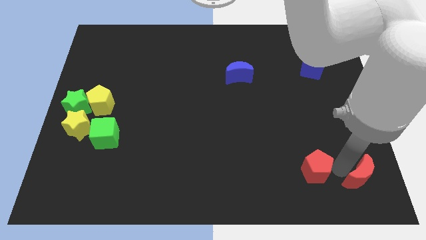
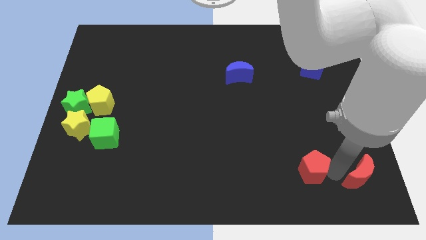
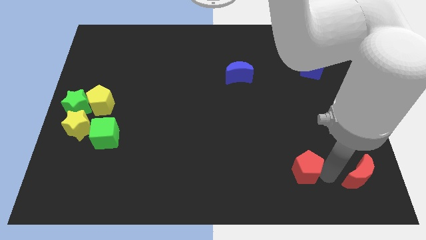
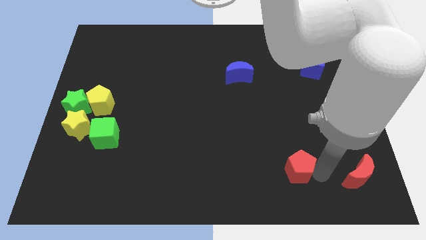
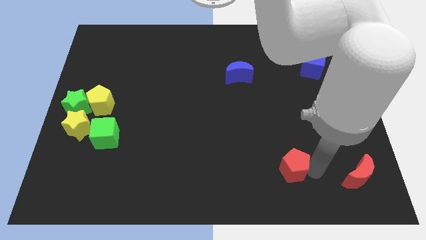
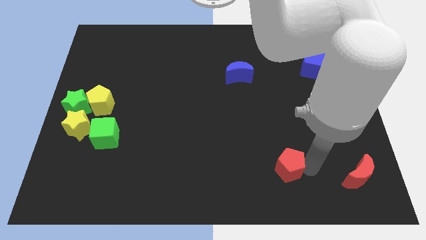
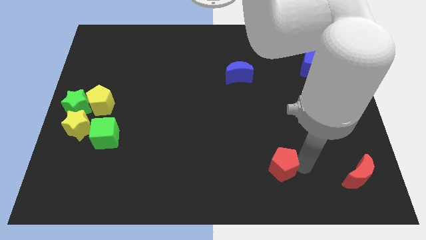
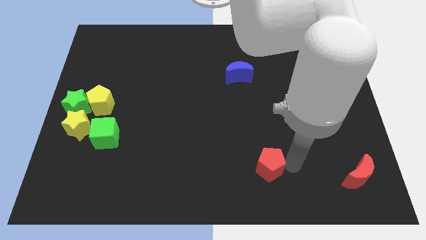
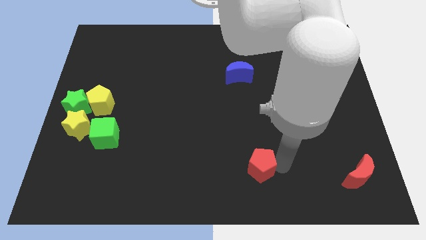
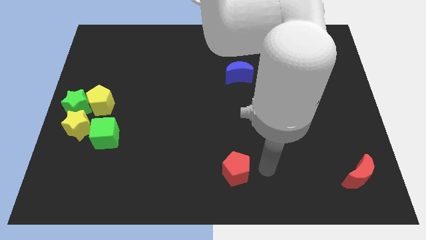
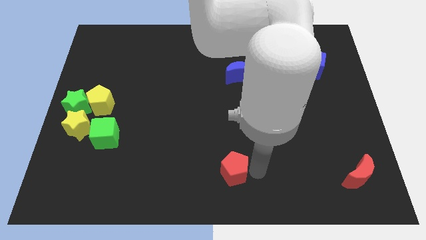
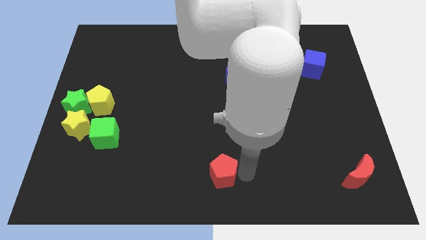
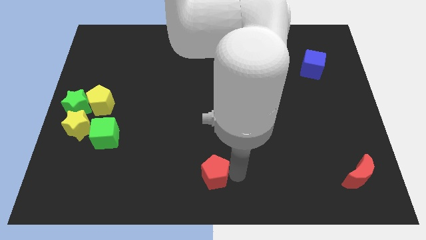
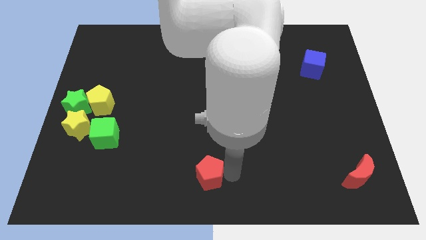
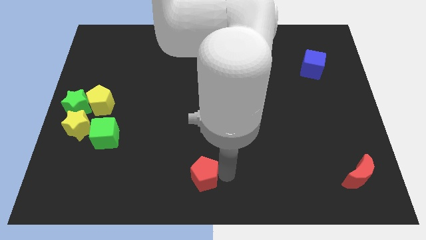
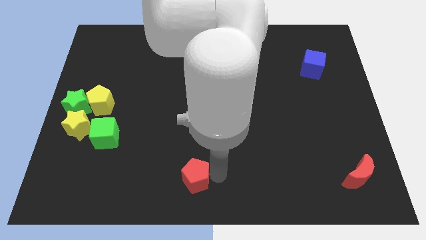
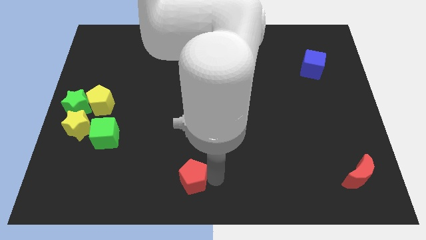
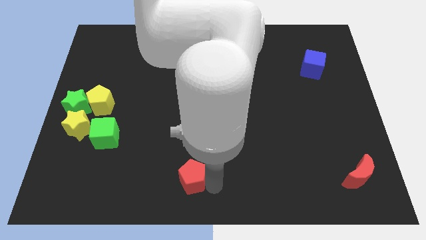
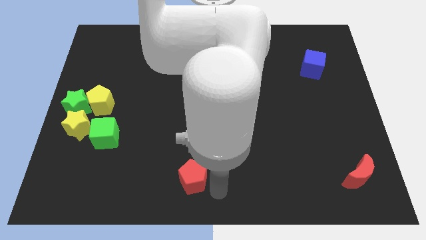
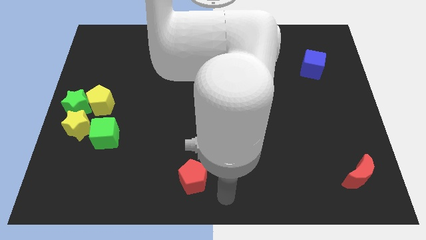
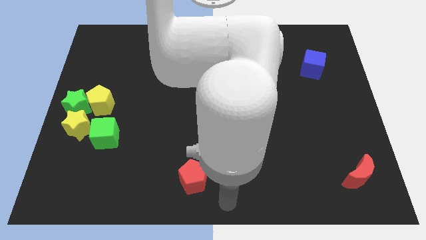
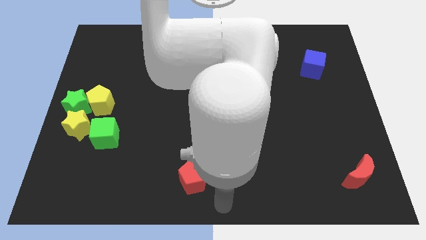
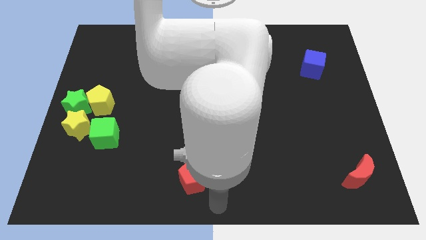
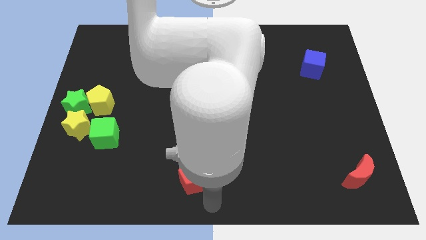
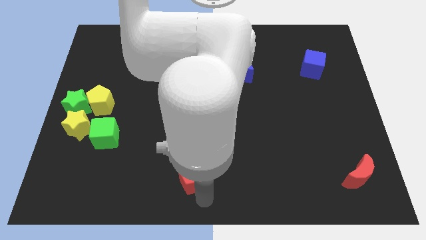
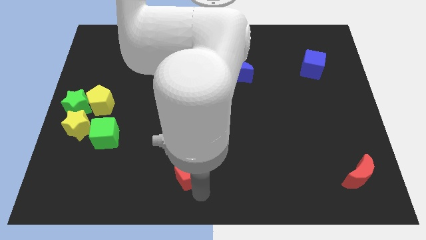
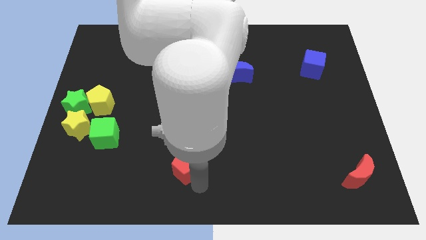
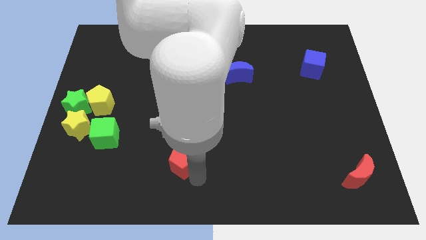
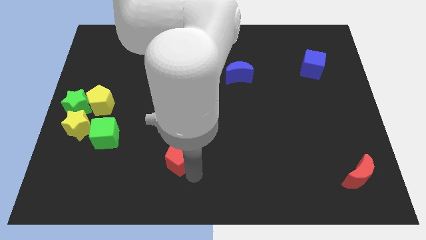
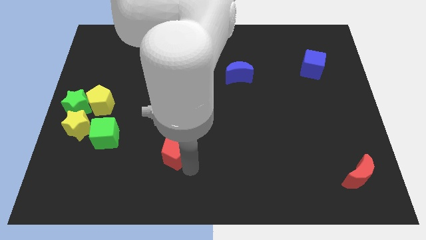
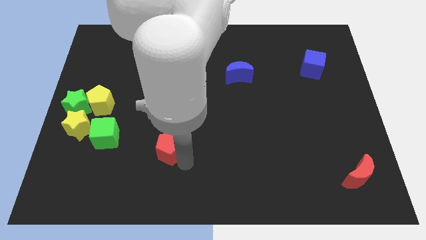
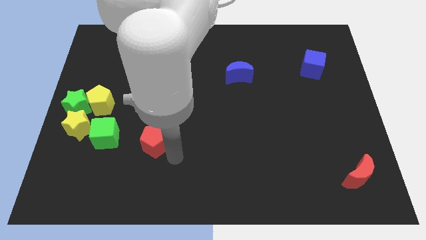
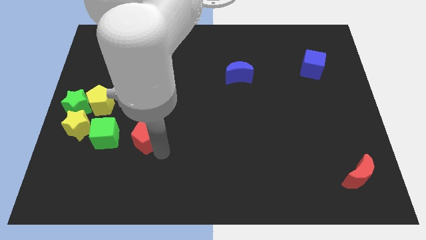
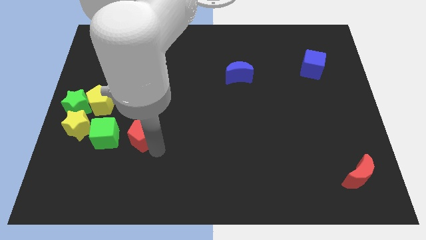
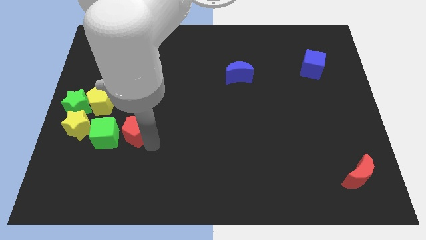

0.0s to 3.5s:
move the red pentagon to the right of the green cube

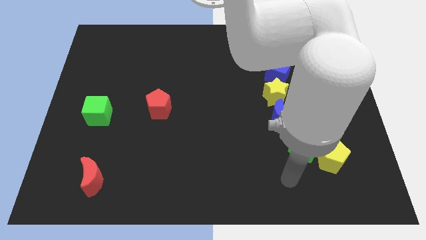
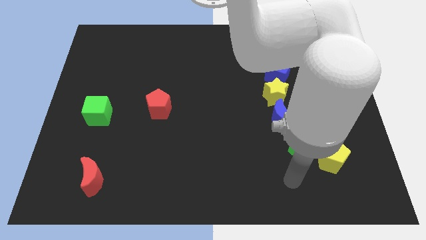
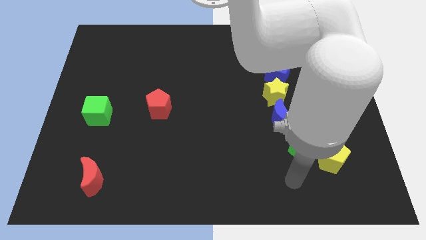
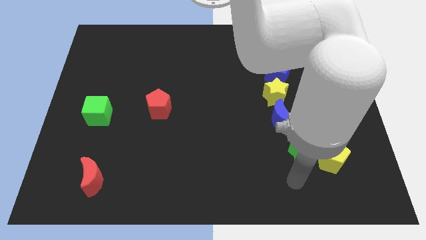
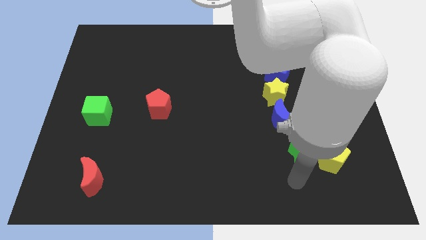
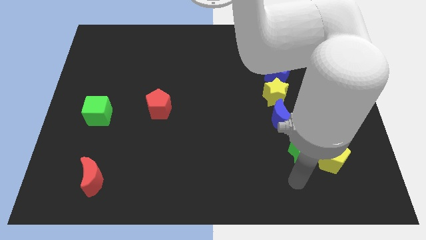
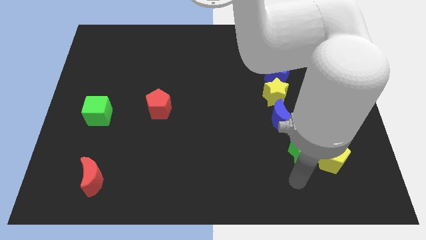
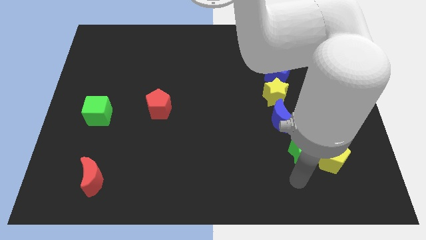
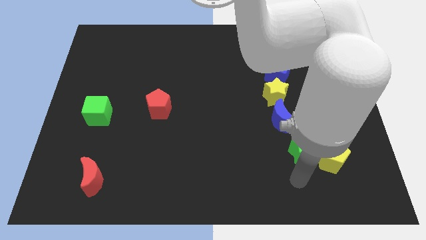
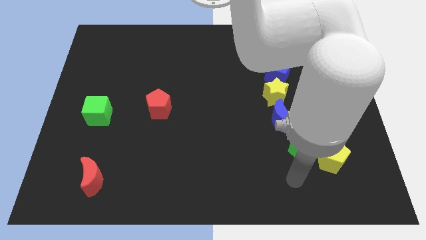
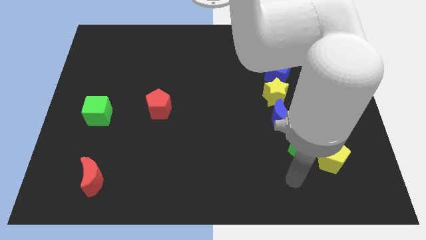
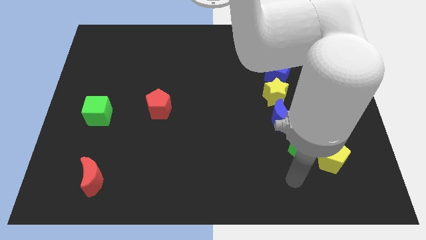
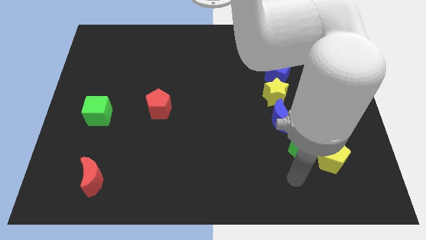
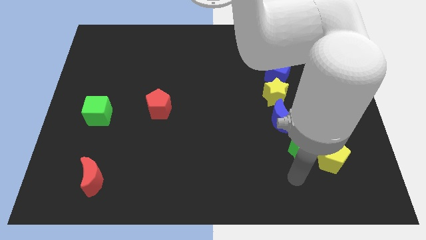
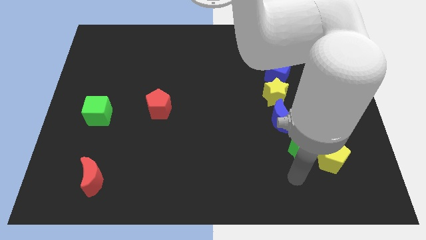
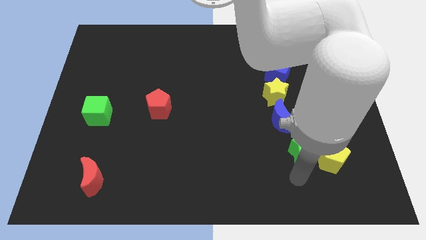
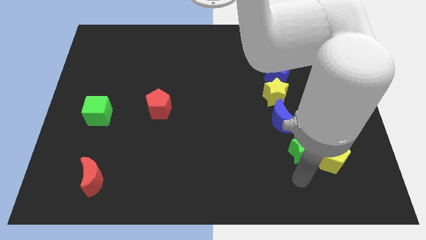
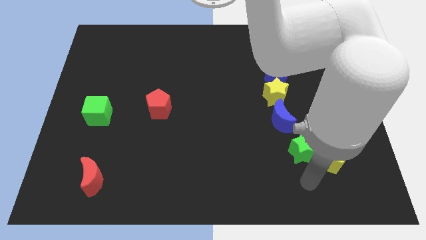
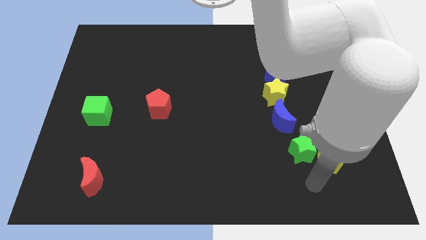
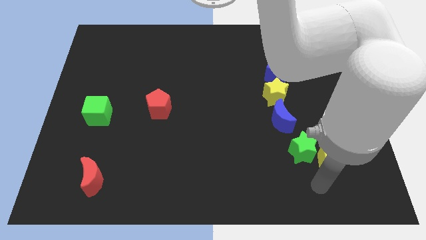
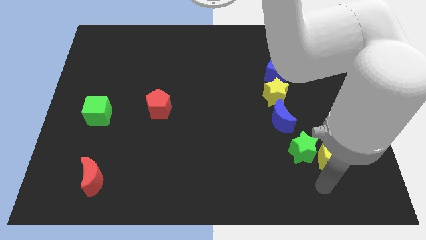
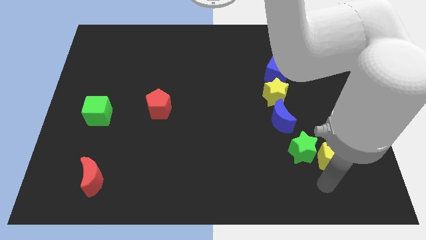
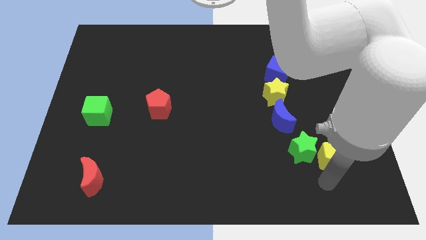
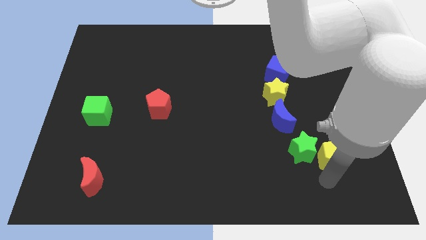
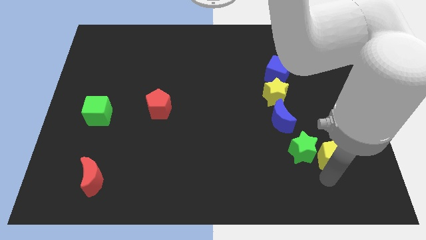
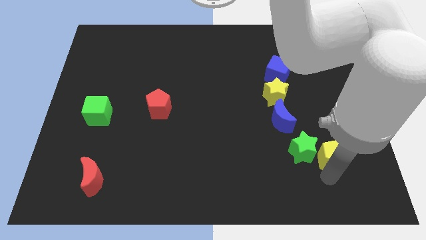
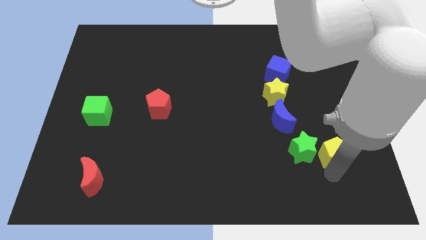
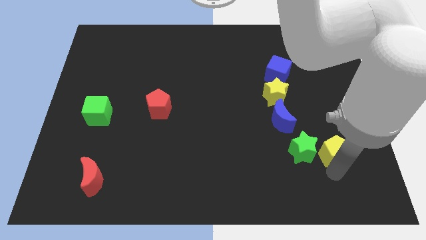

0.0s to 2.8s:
touch the yellow pentagon

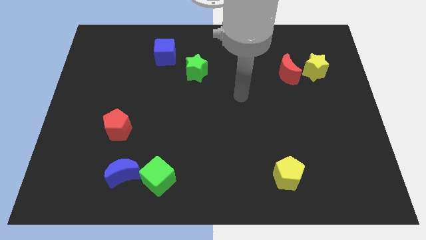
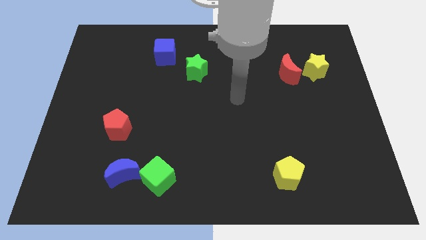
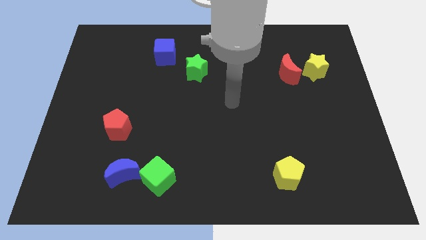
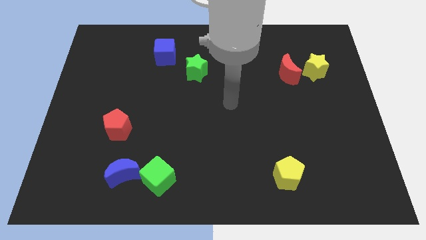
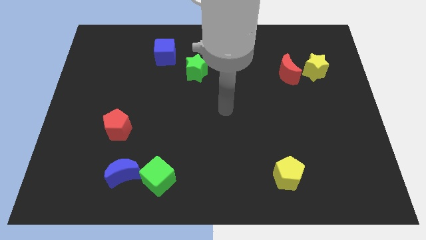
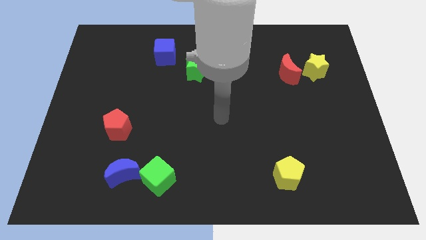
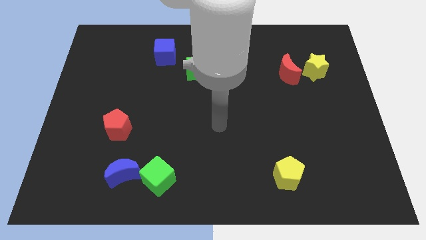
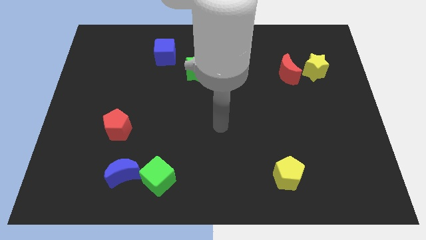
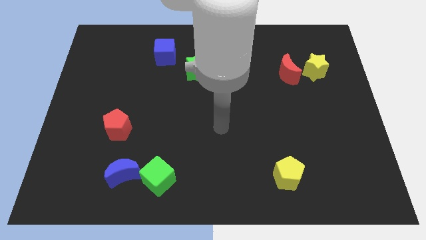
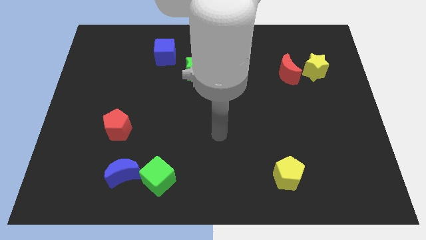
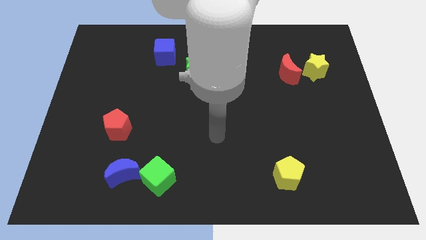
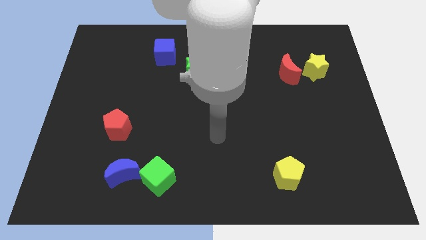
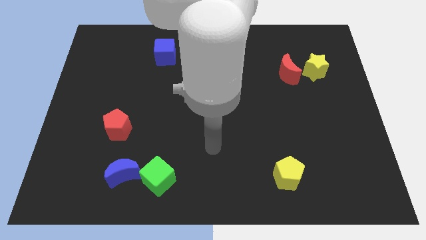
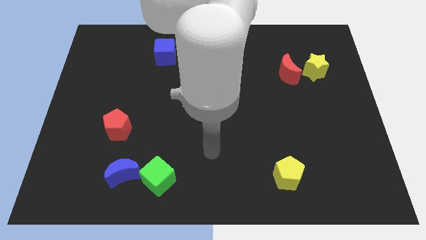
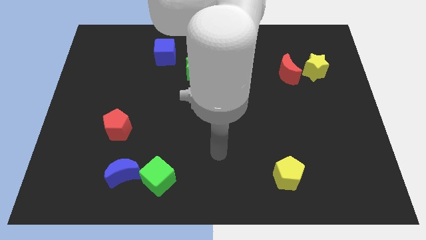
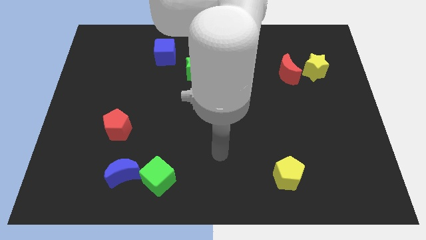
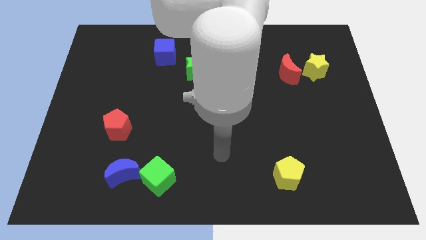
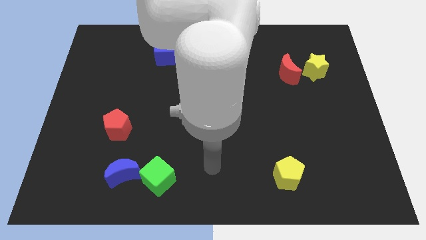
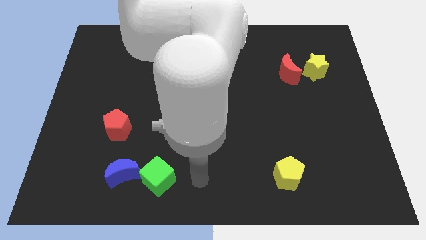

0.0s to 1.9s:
move your hand to the right of the green cube

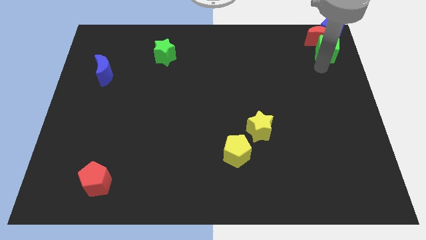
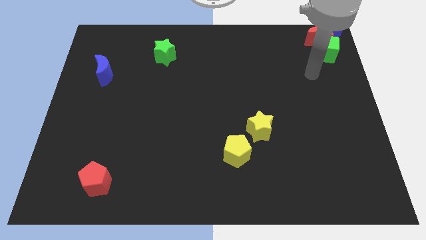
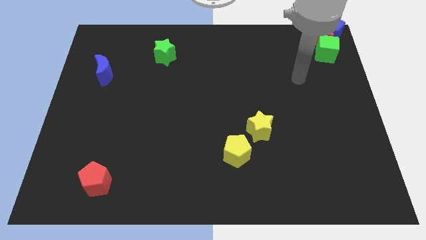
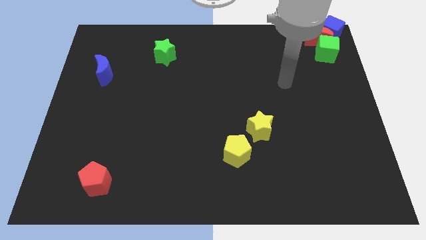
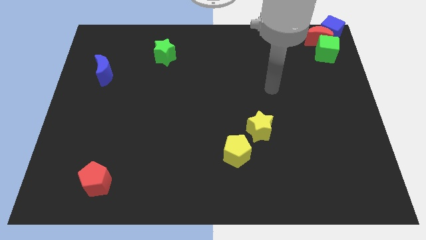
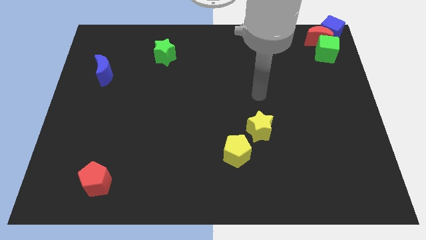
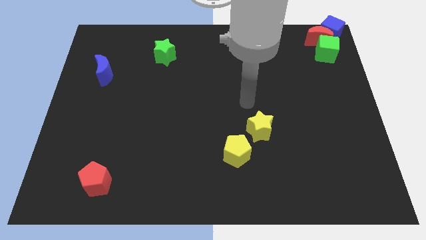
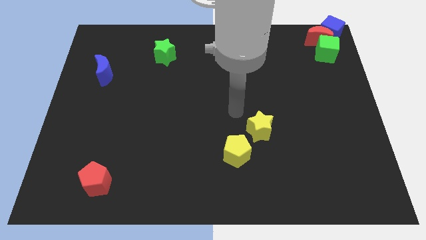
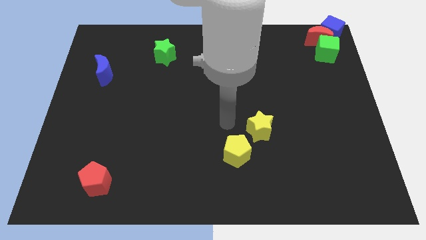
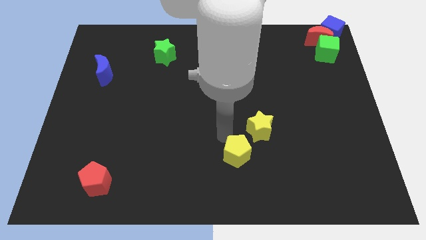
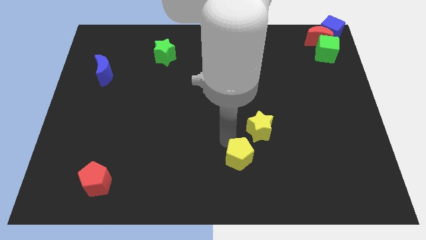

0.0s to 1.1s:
move the arm away from the green cube
